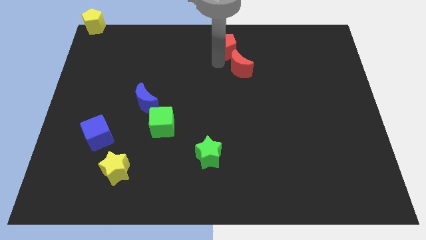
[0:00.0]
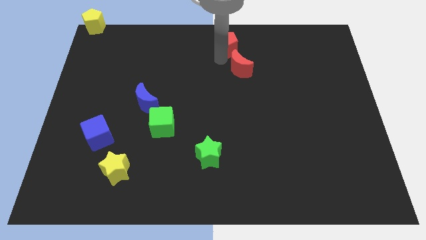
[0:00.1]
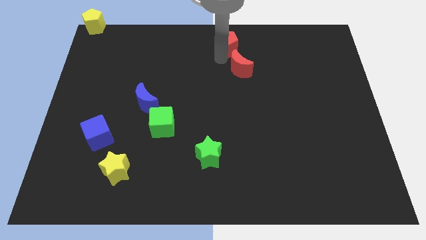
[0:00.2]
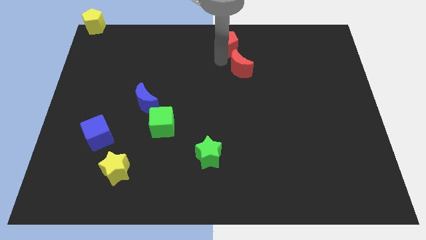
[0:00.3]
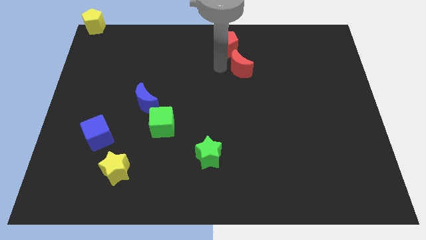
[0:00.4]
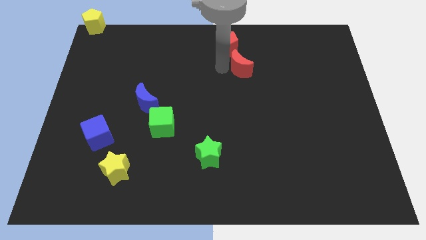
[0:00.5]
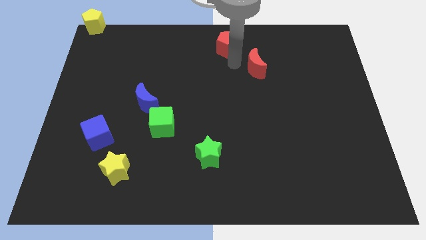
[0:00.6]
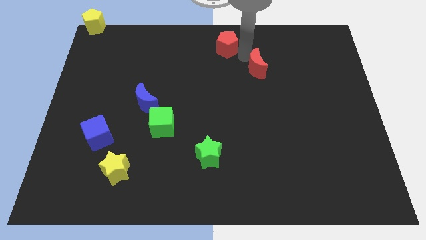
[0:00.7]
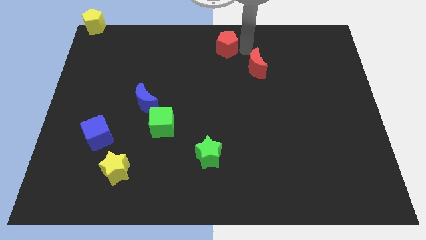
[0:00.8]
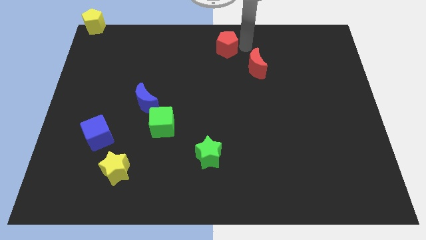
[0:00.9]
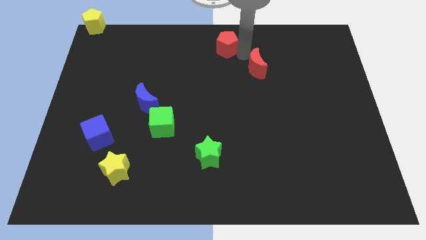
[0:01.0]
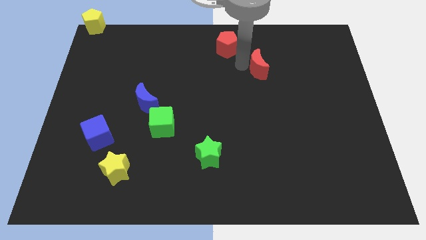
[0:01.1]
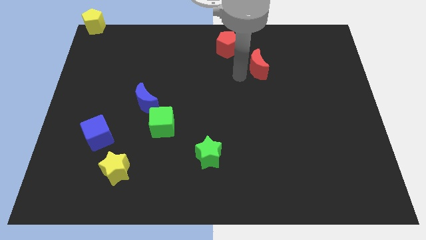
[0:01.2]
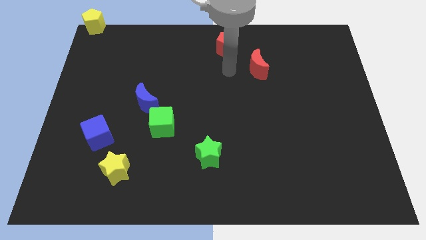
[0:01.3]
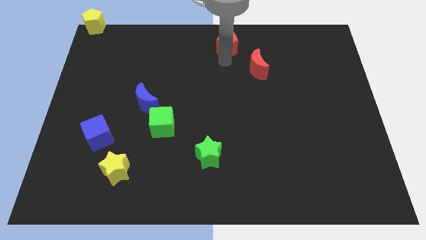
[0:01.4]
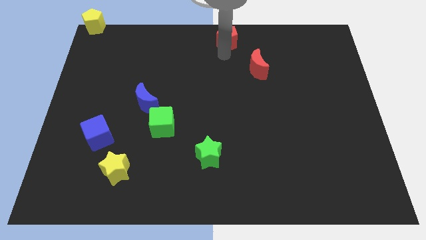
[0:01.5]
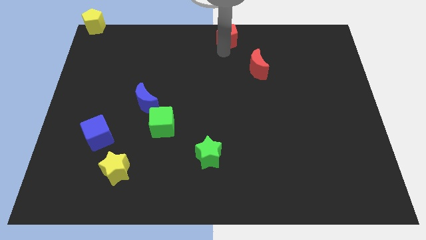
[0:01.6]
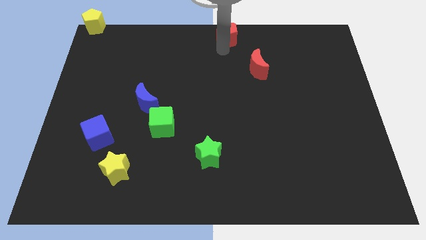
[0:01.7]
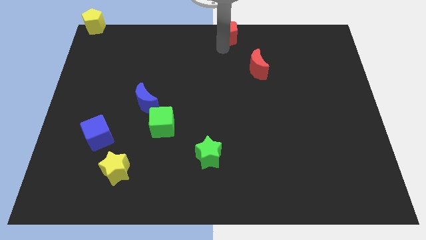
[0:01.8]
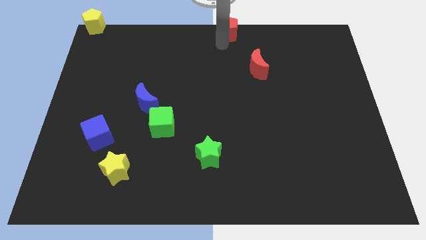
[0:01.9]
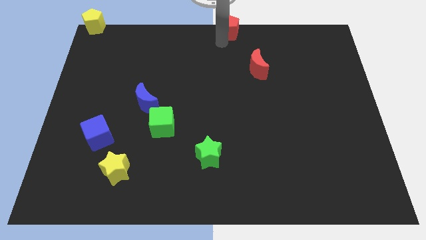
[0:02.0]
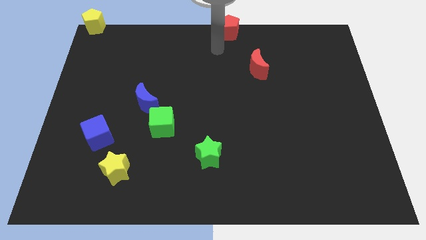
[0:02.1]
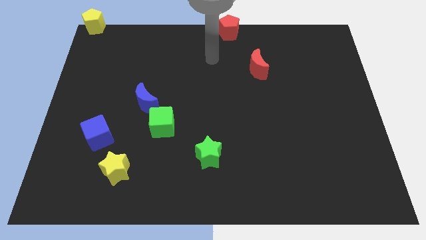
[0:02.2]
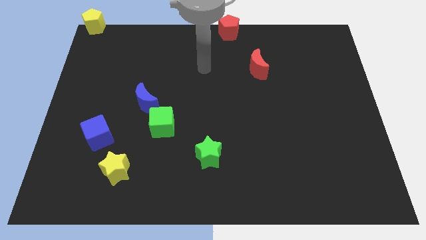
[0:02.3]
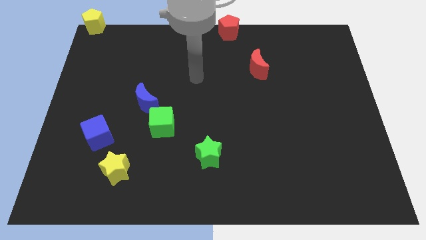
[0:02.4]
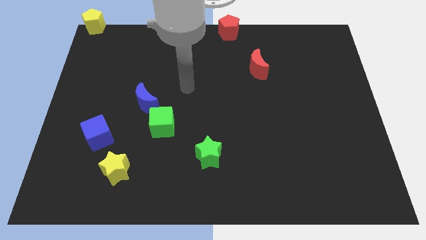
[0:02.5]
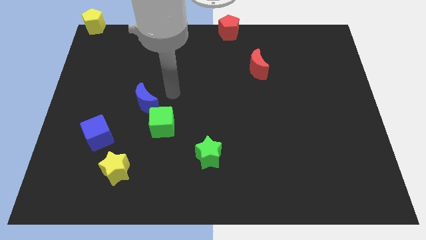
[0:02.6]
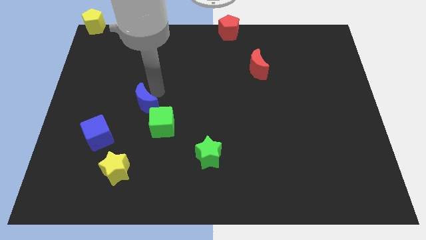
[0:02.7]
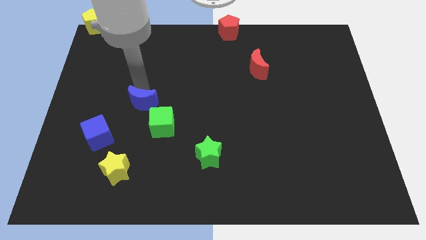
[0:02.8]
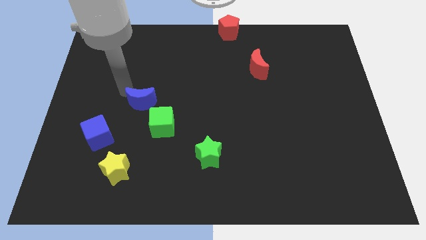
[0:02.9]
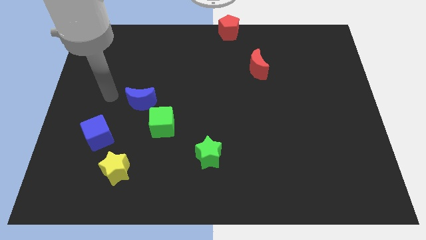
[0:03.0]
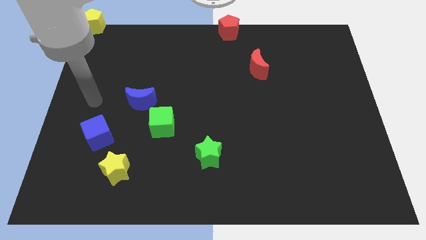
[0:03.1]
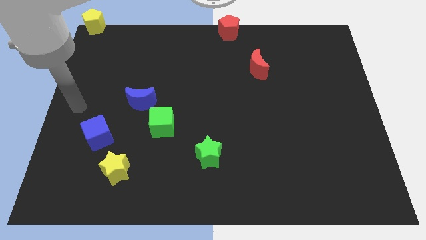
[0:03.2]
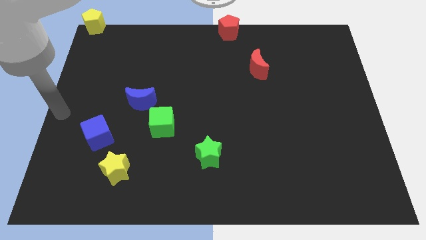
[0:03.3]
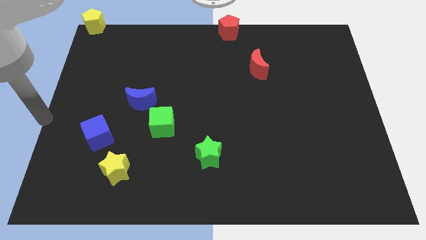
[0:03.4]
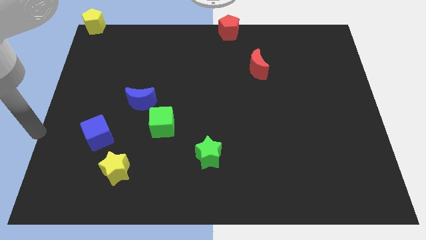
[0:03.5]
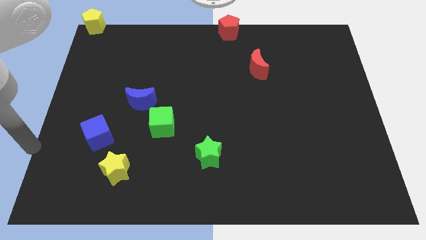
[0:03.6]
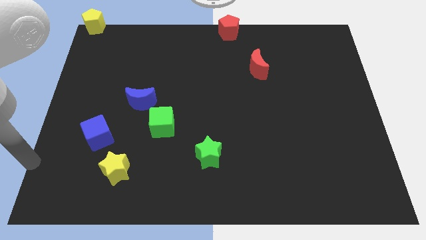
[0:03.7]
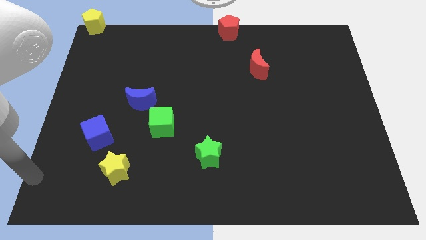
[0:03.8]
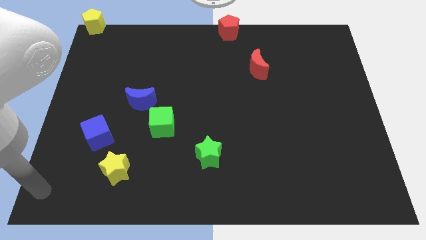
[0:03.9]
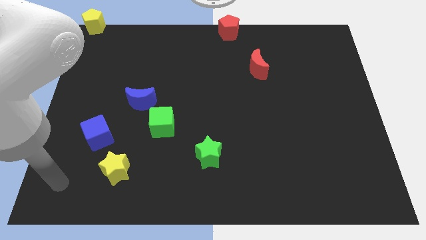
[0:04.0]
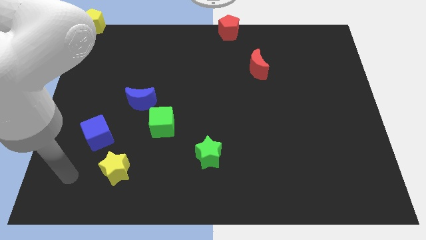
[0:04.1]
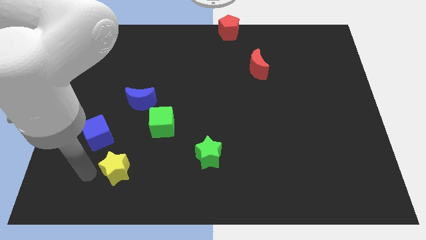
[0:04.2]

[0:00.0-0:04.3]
separate the red pentagon and red moon

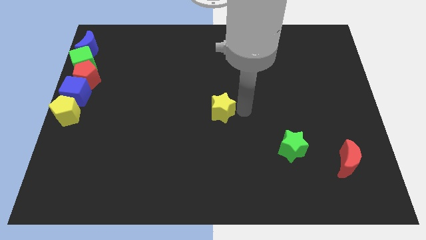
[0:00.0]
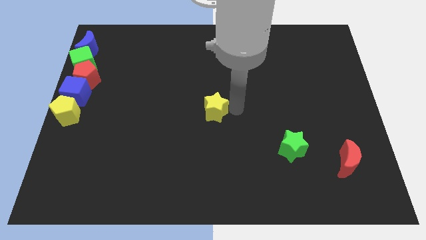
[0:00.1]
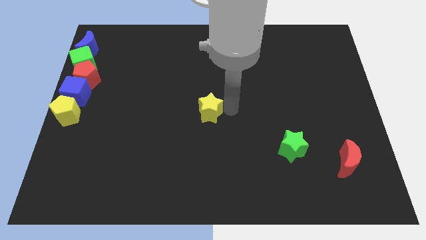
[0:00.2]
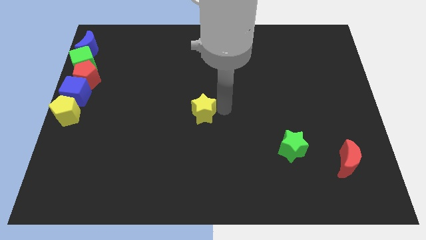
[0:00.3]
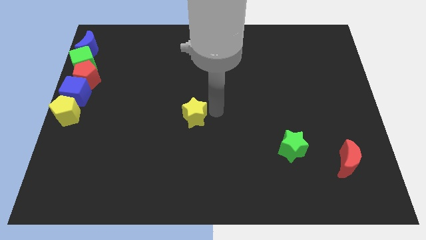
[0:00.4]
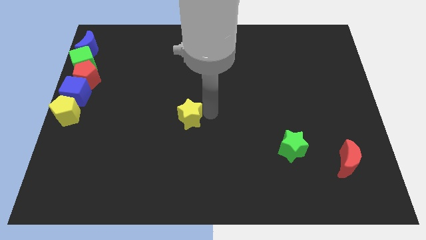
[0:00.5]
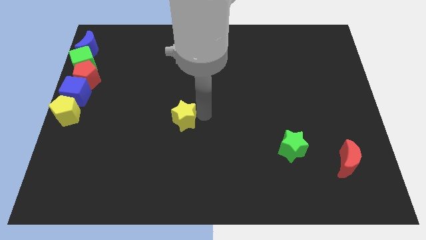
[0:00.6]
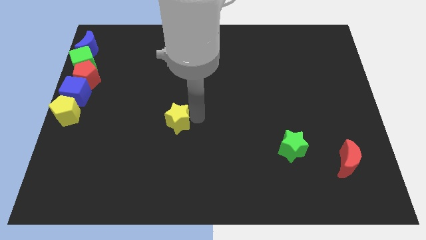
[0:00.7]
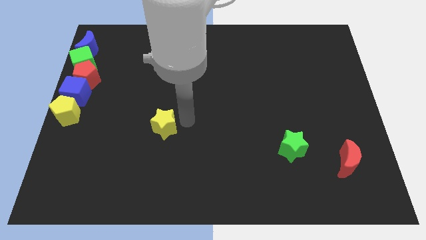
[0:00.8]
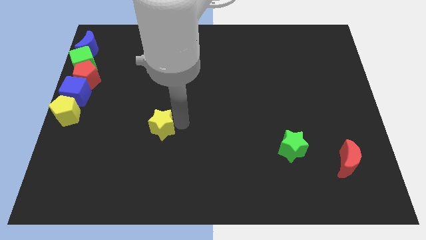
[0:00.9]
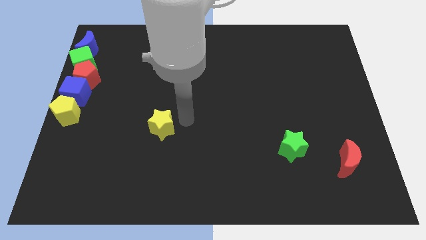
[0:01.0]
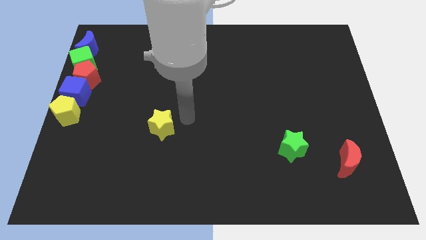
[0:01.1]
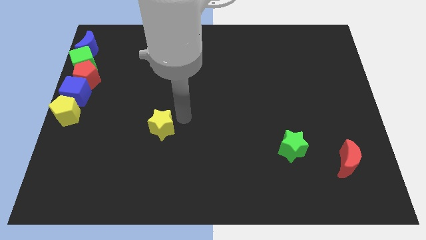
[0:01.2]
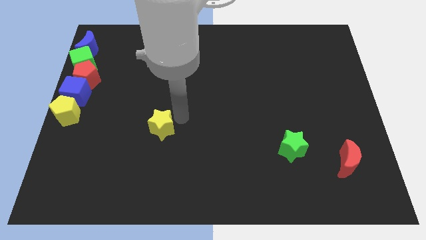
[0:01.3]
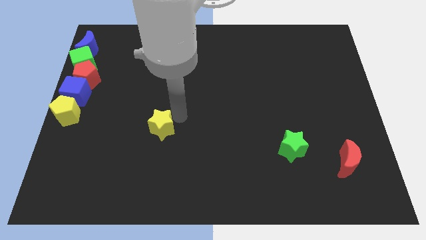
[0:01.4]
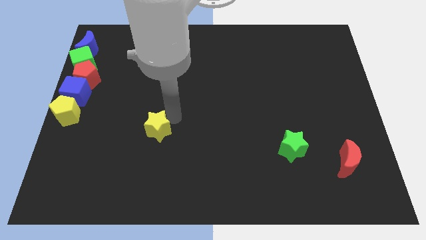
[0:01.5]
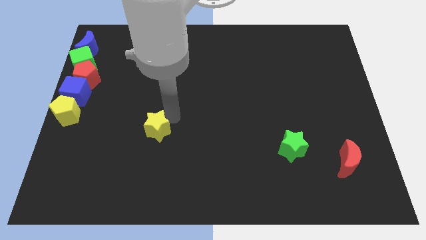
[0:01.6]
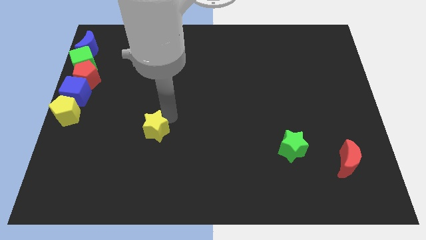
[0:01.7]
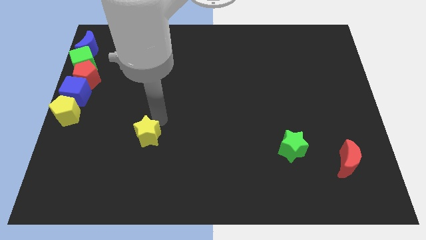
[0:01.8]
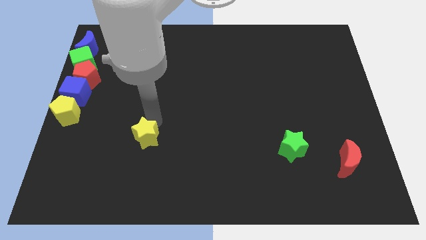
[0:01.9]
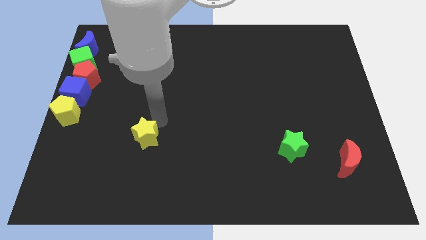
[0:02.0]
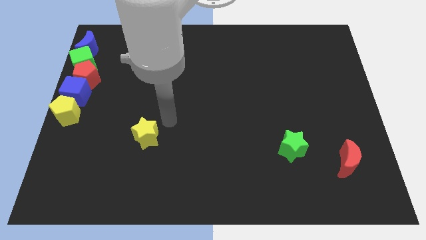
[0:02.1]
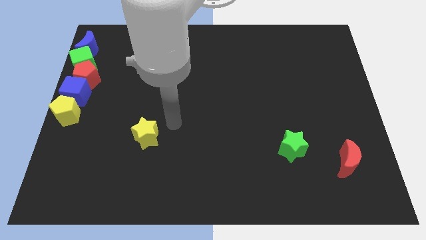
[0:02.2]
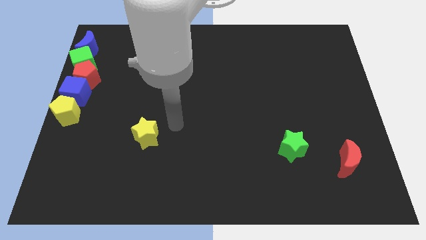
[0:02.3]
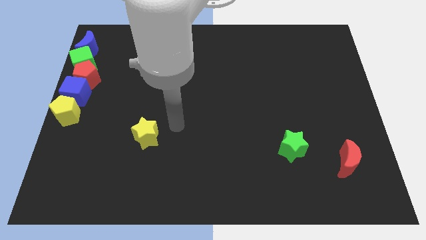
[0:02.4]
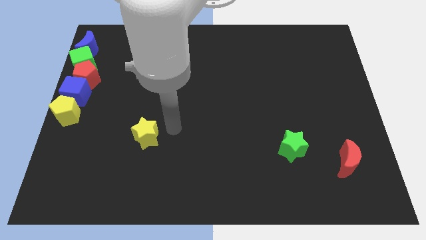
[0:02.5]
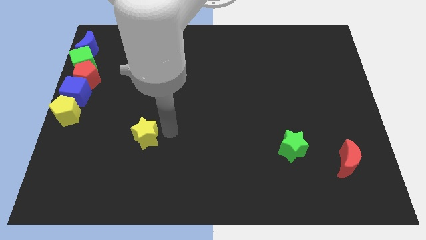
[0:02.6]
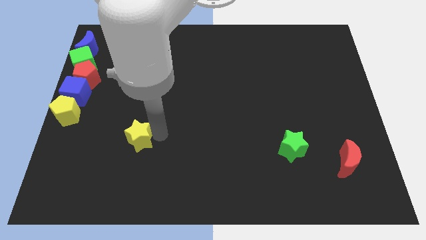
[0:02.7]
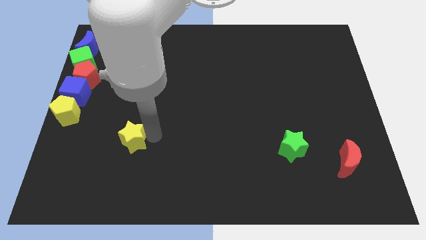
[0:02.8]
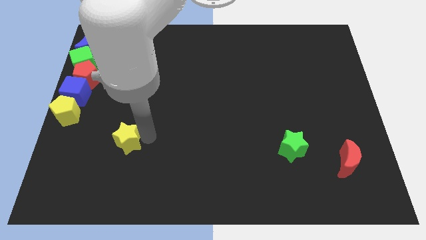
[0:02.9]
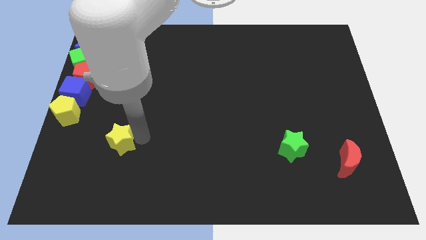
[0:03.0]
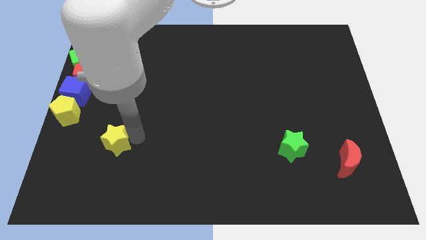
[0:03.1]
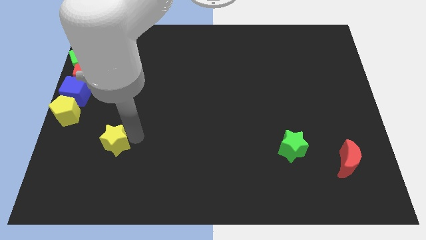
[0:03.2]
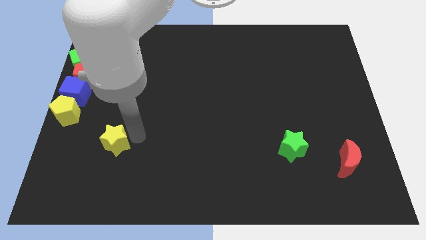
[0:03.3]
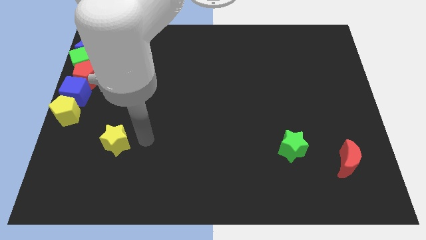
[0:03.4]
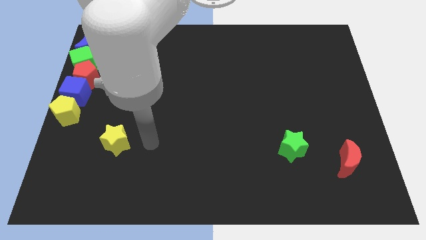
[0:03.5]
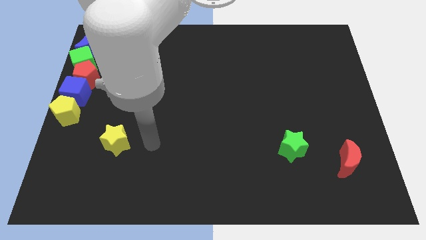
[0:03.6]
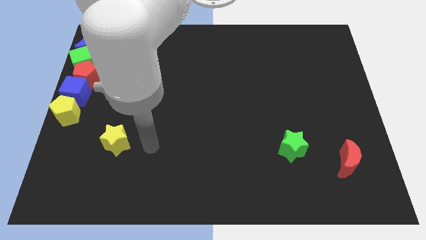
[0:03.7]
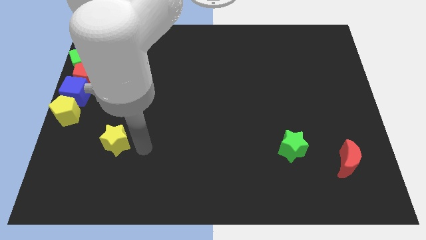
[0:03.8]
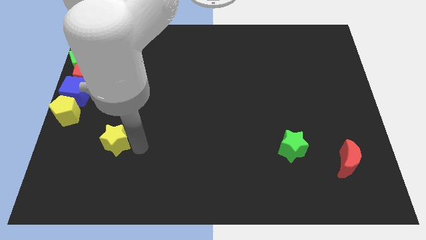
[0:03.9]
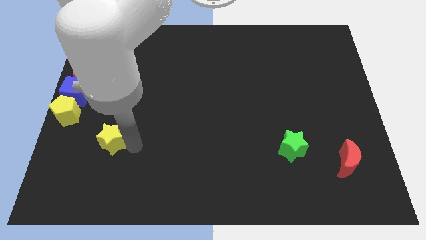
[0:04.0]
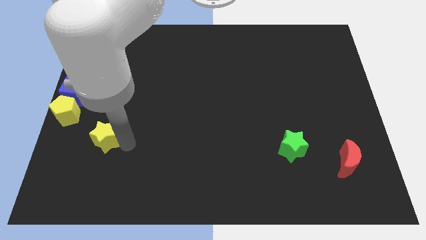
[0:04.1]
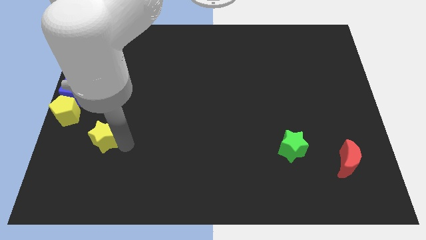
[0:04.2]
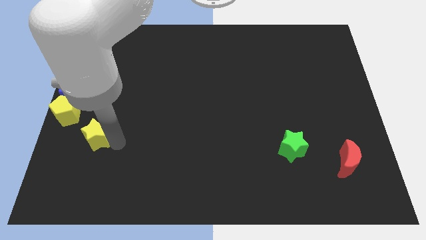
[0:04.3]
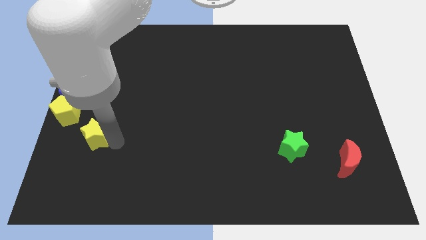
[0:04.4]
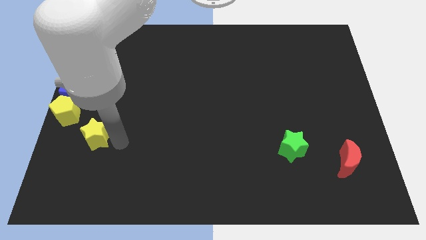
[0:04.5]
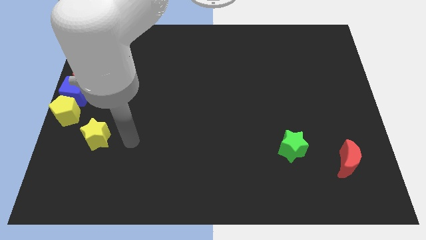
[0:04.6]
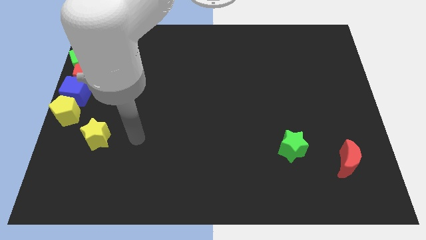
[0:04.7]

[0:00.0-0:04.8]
push the yellow star to the bottom right of the yellow pentagon
